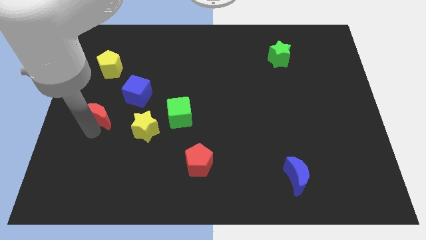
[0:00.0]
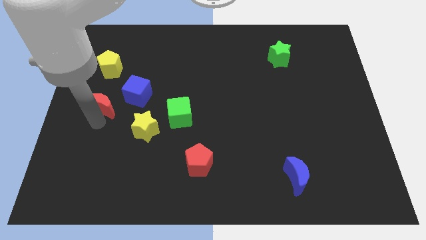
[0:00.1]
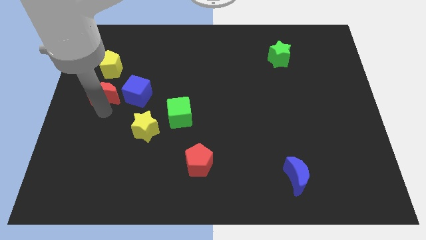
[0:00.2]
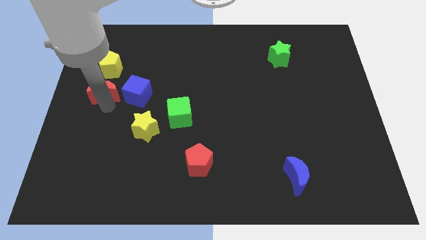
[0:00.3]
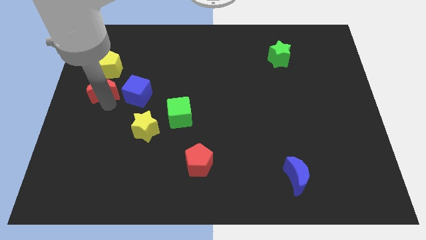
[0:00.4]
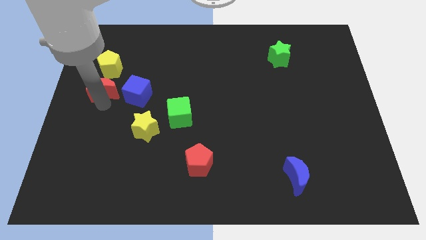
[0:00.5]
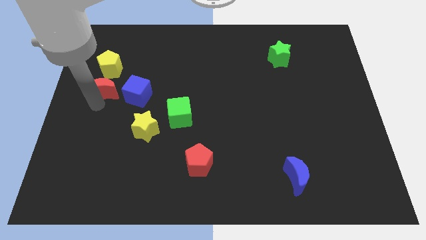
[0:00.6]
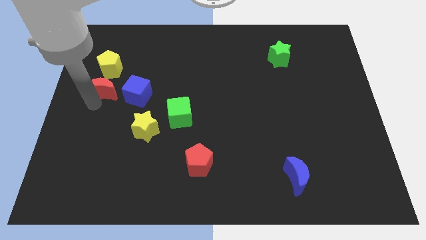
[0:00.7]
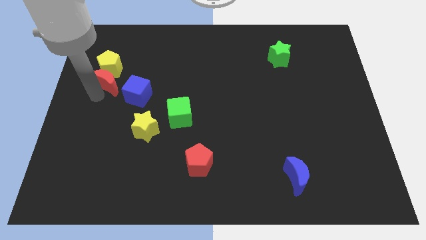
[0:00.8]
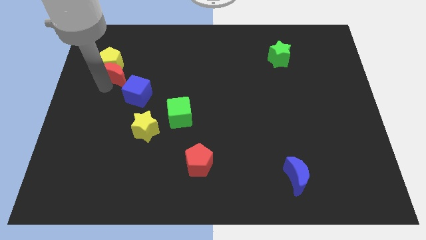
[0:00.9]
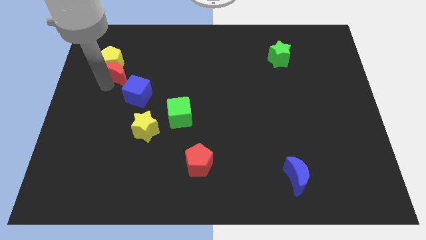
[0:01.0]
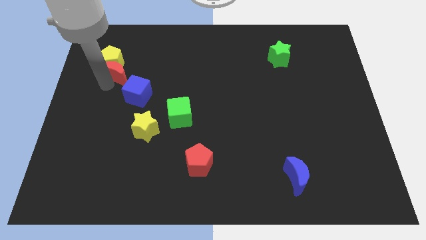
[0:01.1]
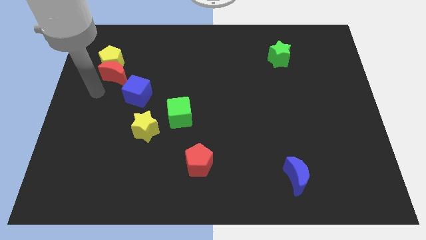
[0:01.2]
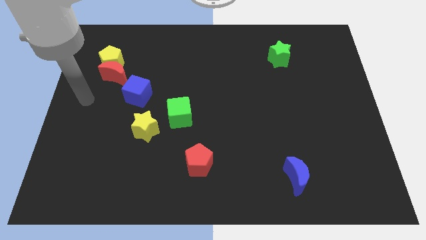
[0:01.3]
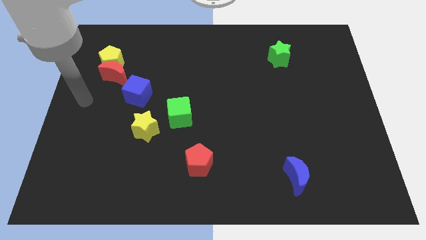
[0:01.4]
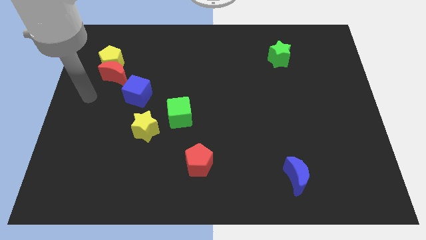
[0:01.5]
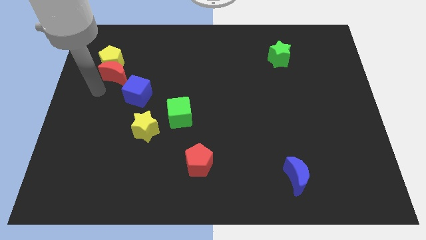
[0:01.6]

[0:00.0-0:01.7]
push red moon into the yellow pentagon

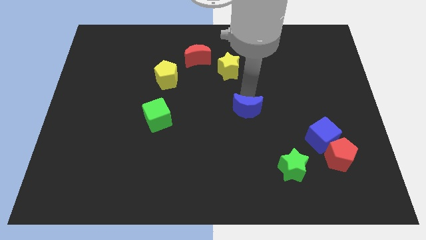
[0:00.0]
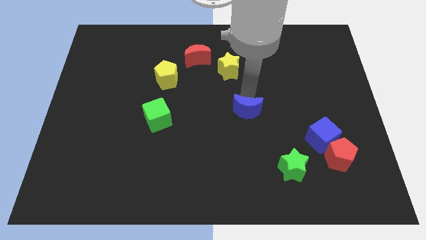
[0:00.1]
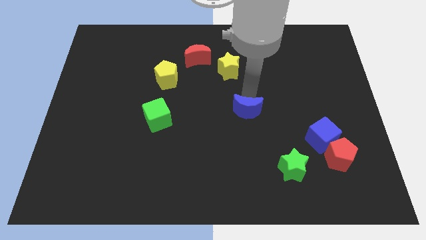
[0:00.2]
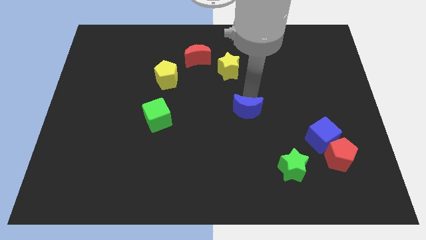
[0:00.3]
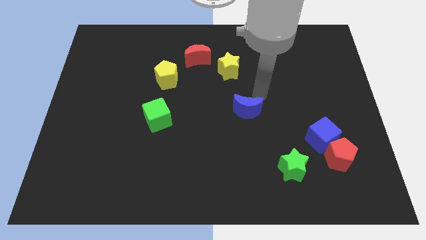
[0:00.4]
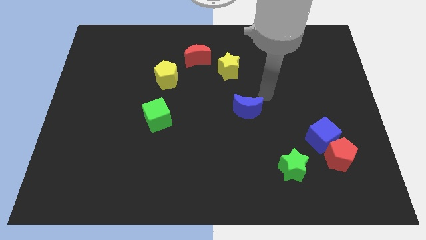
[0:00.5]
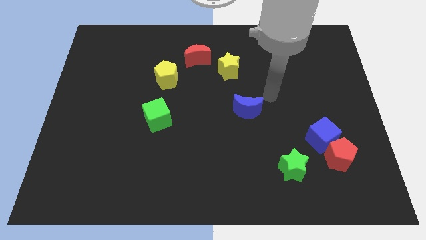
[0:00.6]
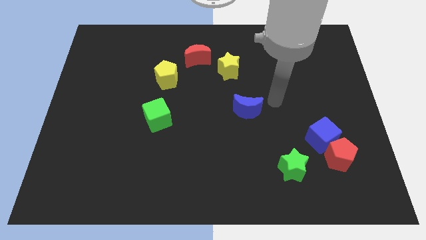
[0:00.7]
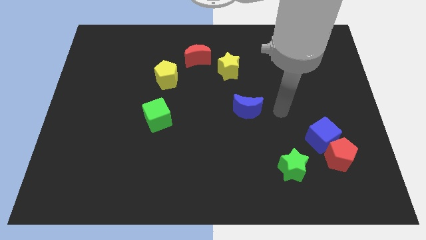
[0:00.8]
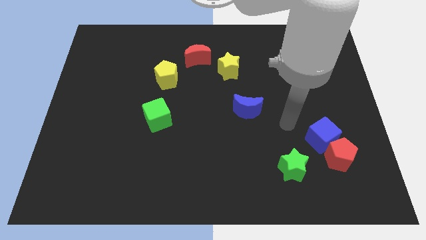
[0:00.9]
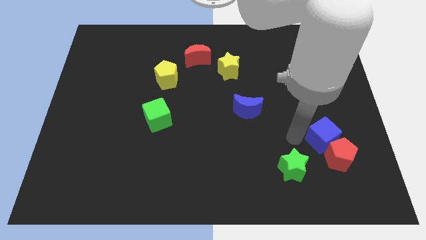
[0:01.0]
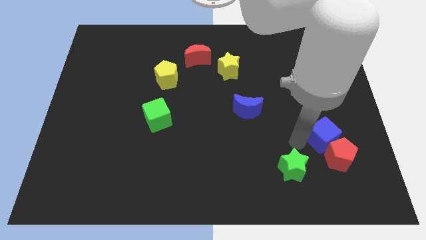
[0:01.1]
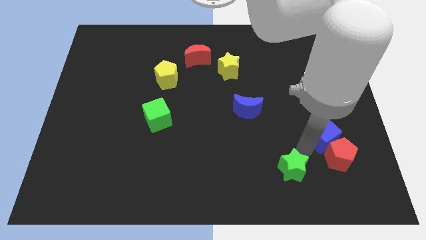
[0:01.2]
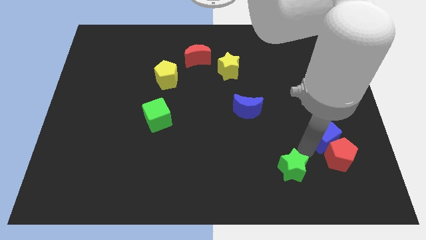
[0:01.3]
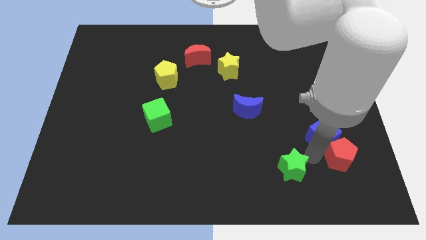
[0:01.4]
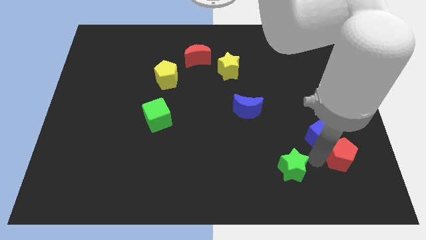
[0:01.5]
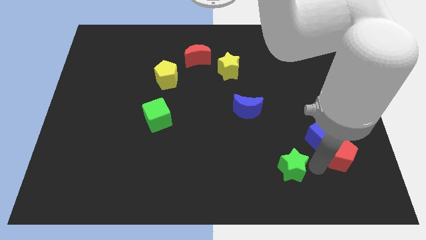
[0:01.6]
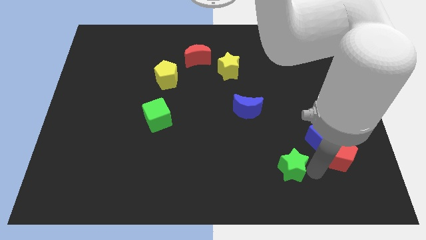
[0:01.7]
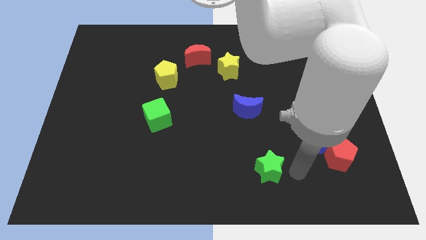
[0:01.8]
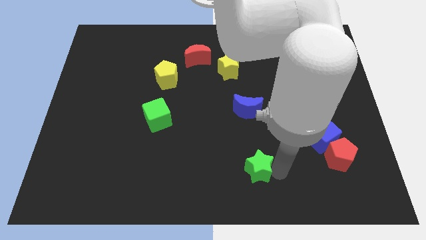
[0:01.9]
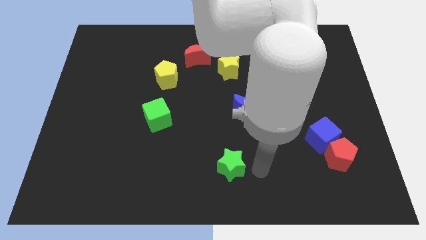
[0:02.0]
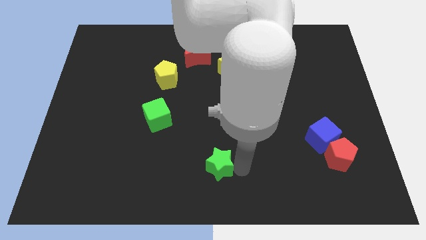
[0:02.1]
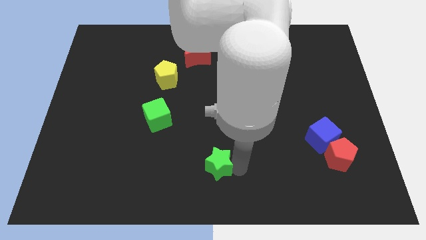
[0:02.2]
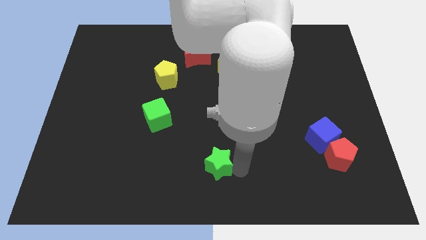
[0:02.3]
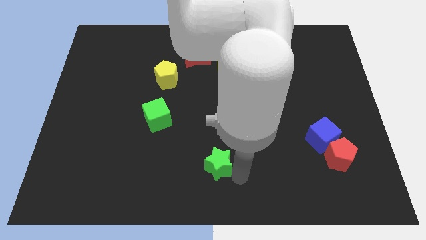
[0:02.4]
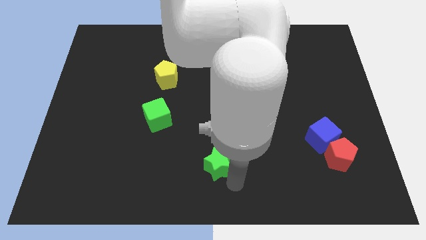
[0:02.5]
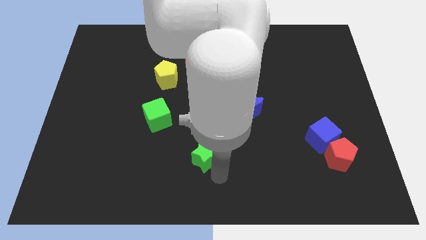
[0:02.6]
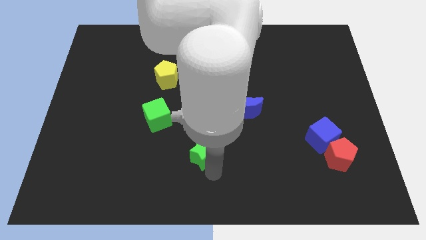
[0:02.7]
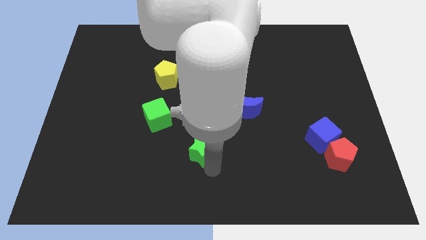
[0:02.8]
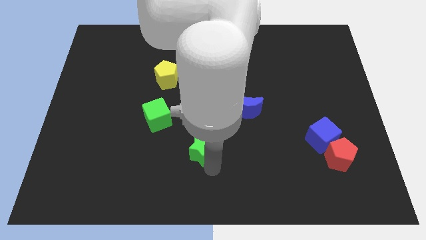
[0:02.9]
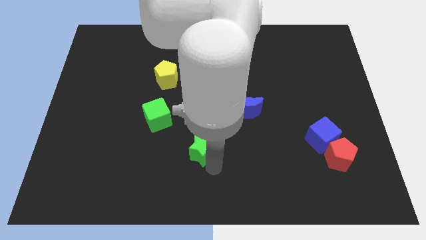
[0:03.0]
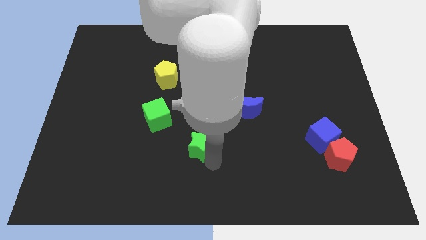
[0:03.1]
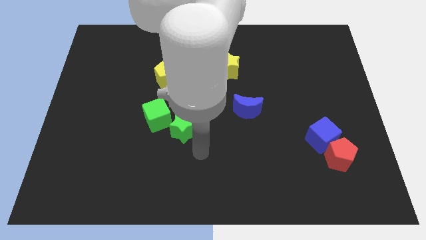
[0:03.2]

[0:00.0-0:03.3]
place the green star diagonally bottom left to the blue crescent

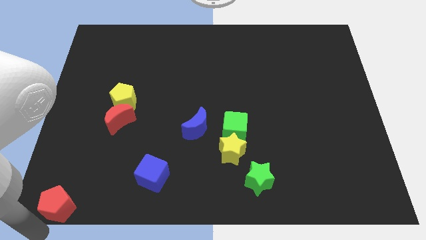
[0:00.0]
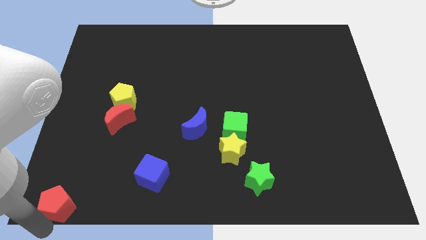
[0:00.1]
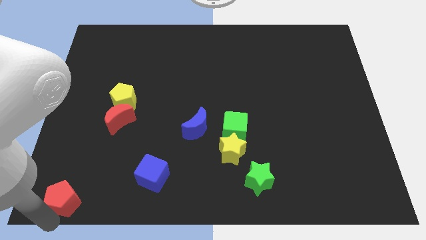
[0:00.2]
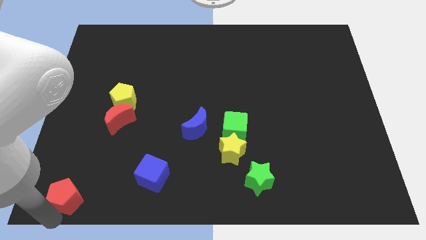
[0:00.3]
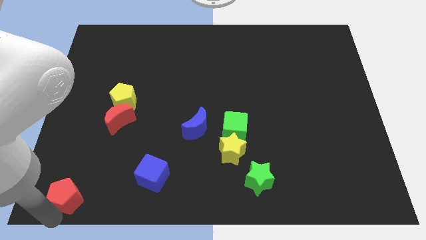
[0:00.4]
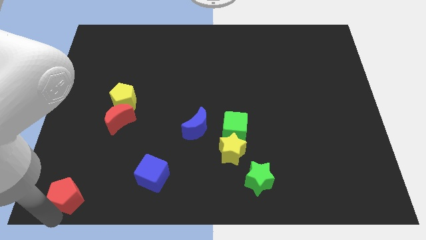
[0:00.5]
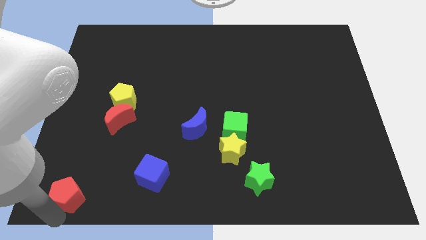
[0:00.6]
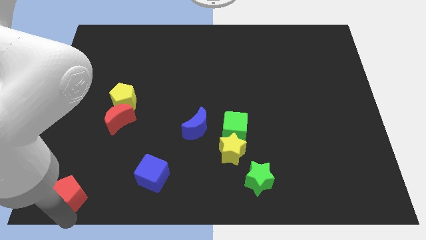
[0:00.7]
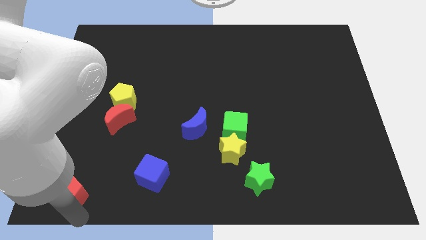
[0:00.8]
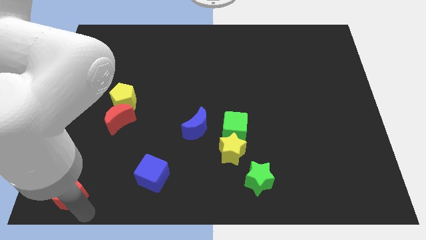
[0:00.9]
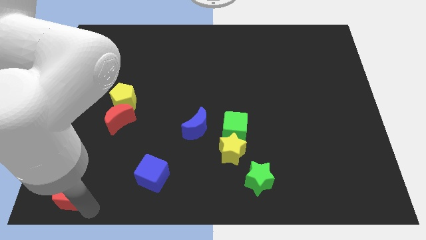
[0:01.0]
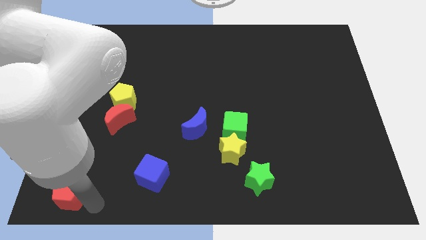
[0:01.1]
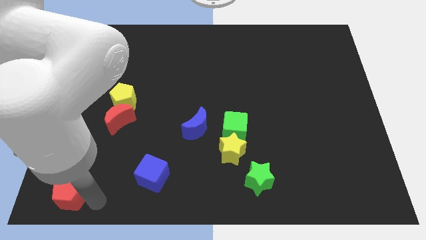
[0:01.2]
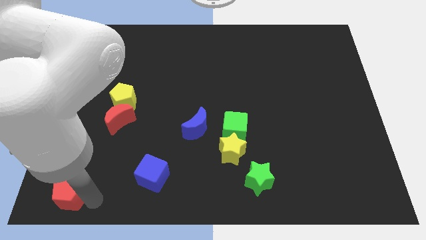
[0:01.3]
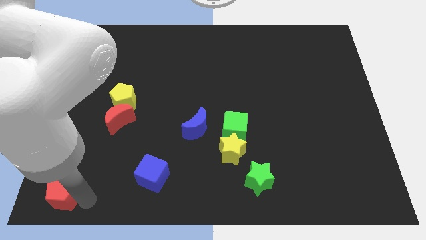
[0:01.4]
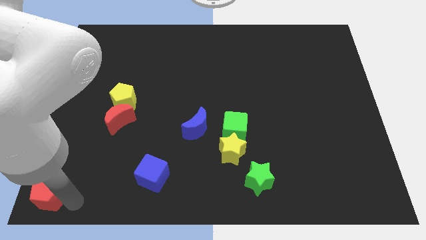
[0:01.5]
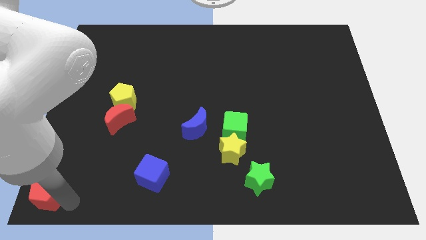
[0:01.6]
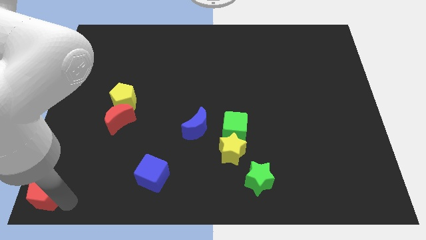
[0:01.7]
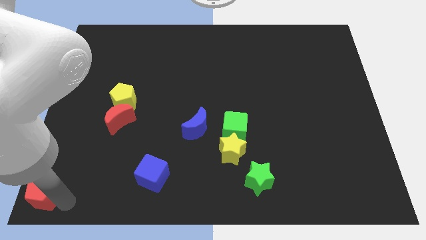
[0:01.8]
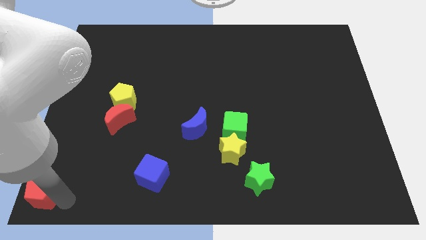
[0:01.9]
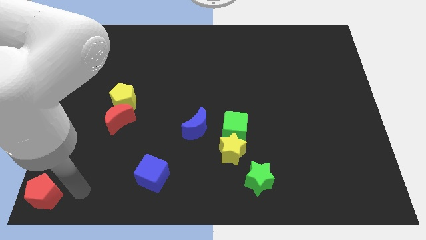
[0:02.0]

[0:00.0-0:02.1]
slightly move red pentagon to the left

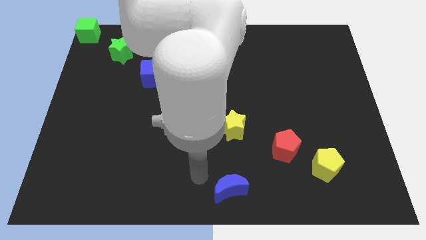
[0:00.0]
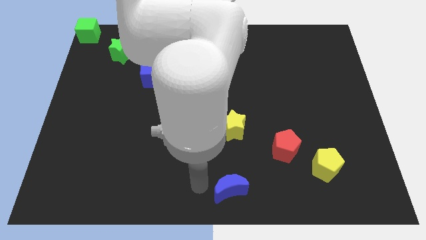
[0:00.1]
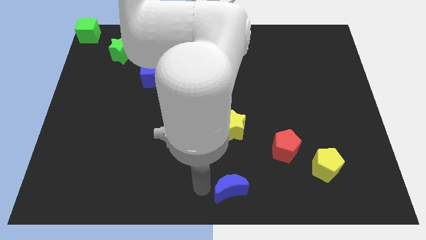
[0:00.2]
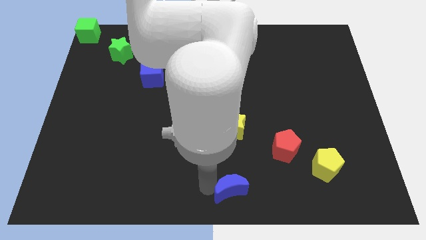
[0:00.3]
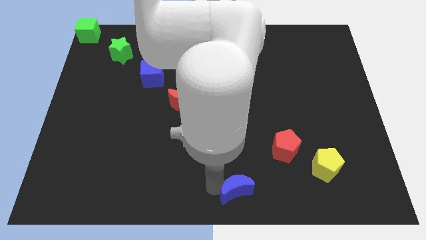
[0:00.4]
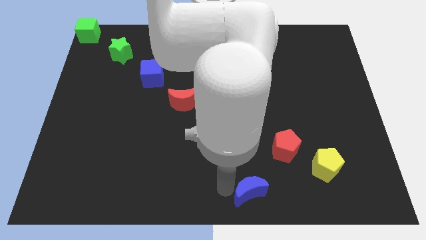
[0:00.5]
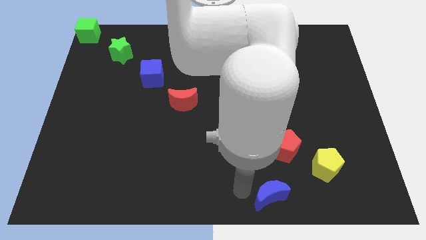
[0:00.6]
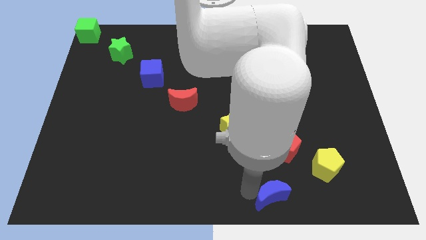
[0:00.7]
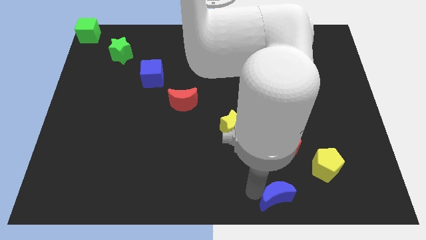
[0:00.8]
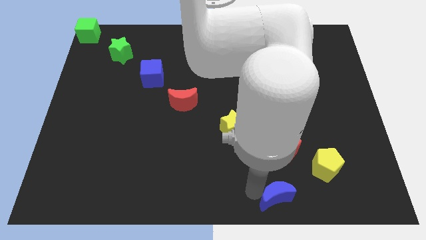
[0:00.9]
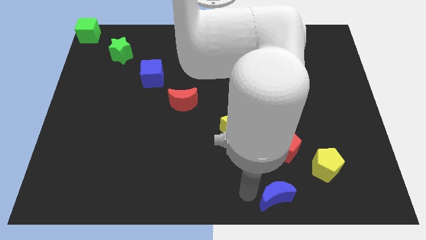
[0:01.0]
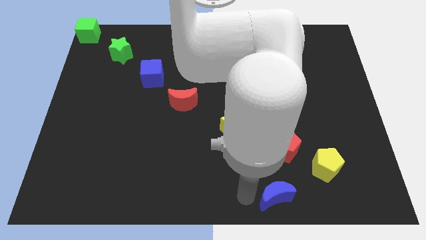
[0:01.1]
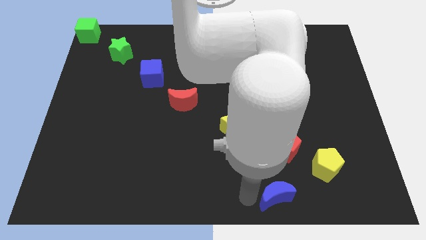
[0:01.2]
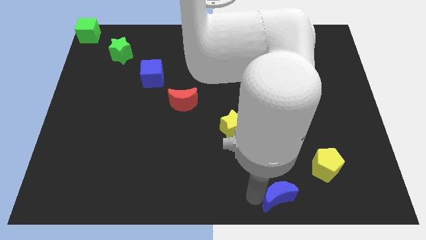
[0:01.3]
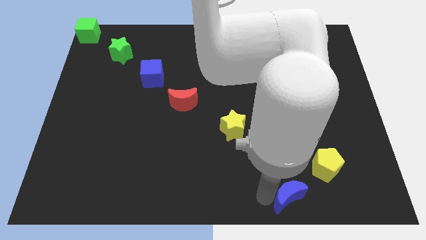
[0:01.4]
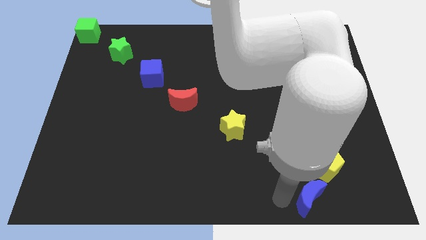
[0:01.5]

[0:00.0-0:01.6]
place the blue moon below the yellow pentagon

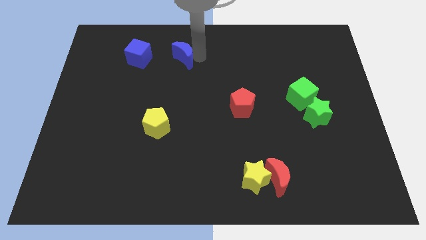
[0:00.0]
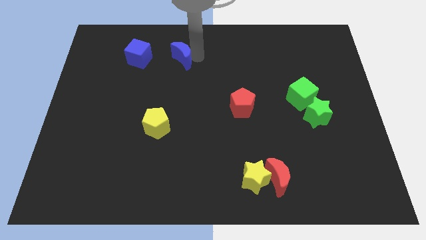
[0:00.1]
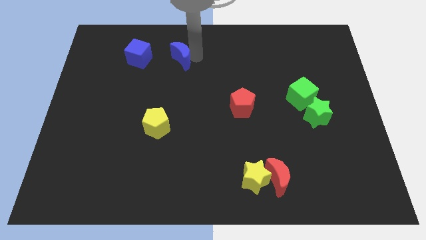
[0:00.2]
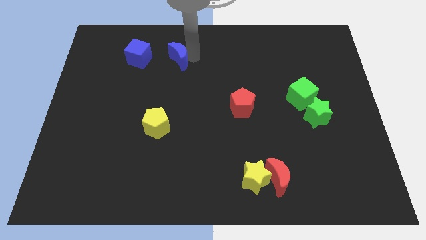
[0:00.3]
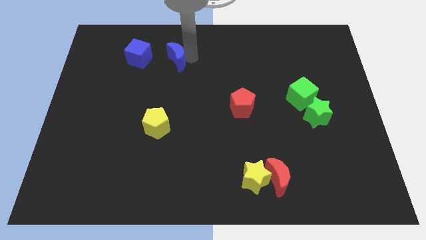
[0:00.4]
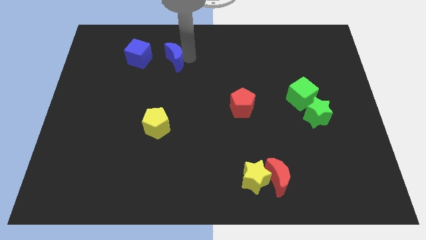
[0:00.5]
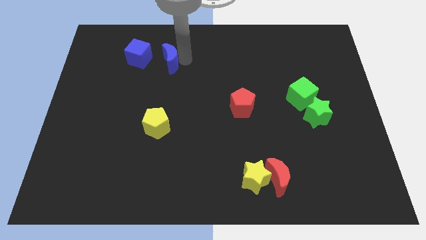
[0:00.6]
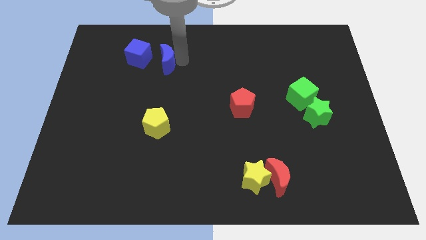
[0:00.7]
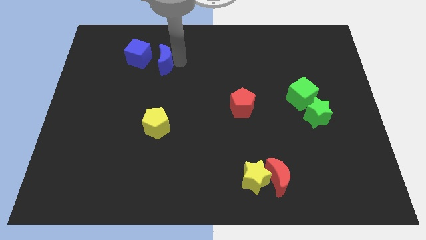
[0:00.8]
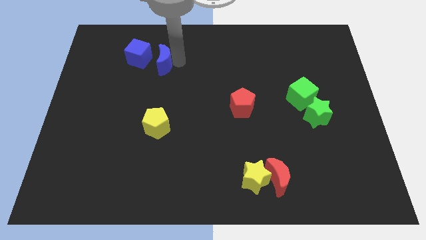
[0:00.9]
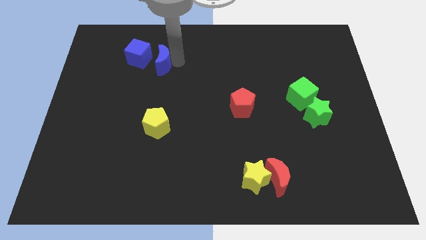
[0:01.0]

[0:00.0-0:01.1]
push blue crescent towards blue cube
